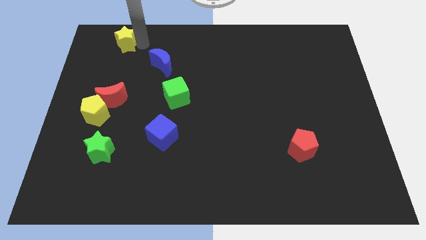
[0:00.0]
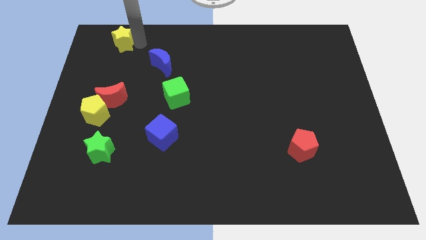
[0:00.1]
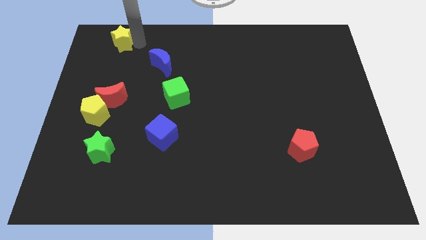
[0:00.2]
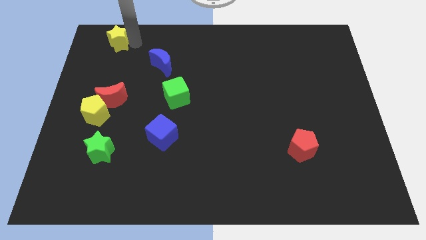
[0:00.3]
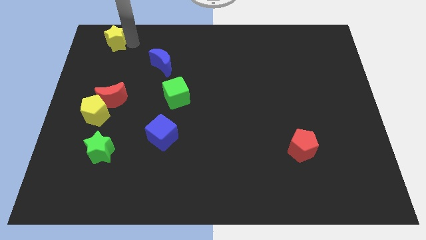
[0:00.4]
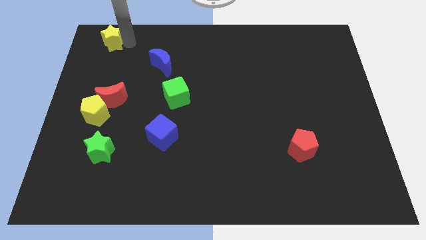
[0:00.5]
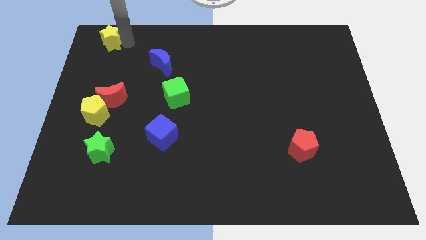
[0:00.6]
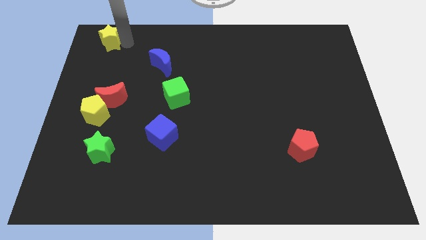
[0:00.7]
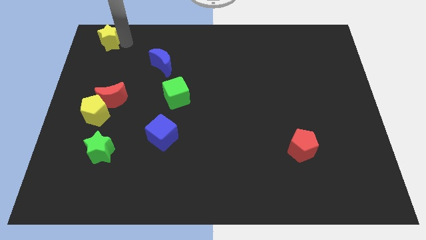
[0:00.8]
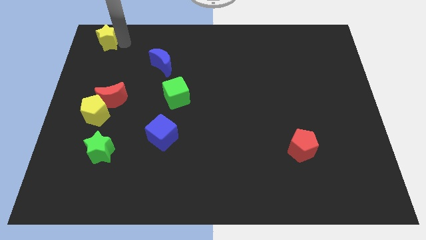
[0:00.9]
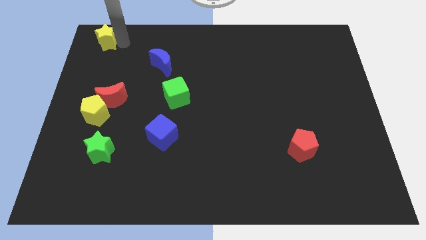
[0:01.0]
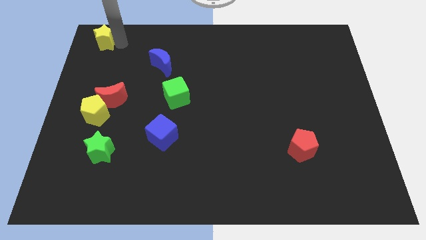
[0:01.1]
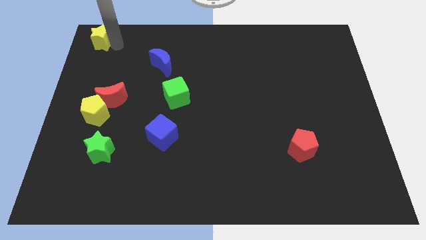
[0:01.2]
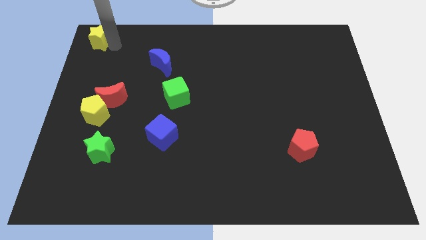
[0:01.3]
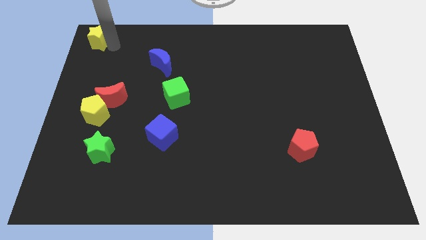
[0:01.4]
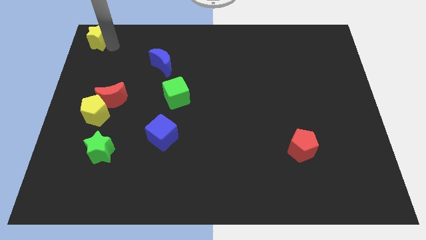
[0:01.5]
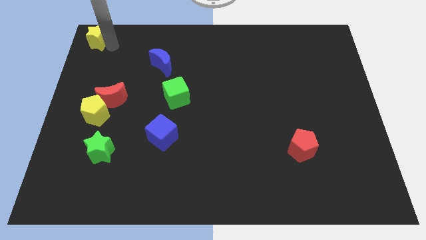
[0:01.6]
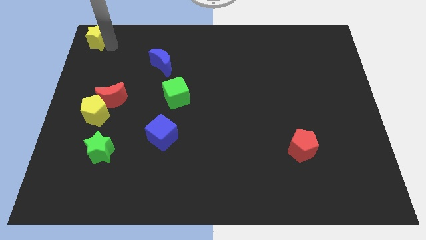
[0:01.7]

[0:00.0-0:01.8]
place the yellow star at the top left corner of the board

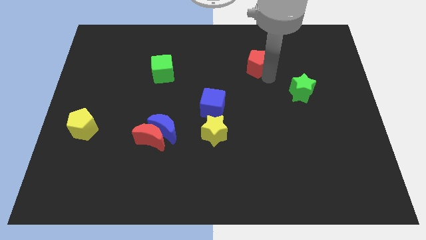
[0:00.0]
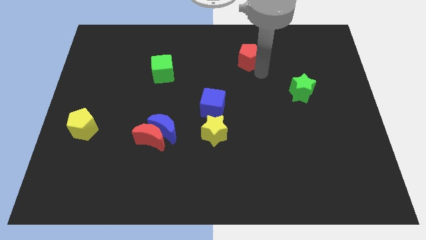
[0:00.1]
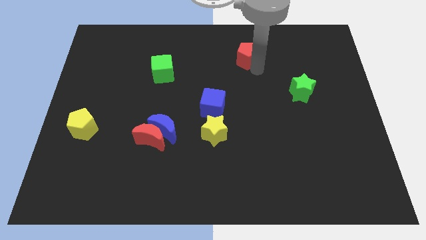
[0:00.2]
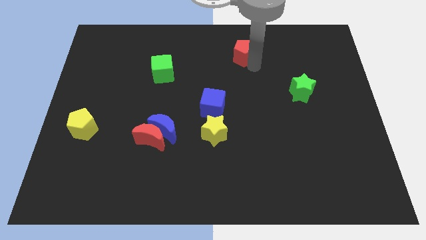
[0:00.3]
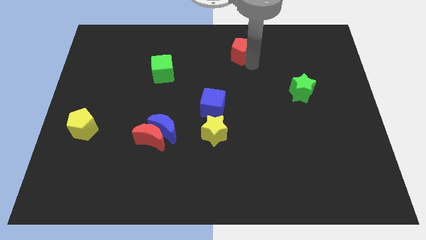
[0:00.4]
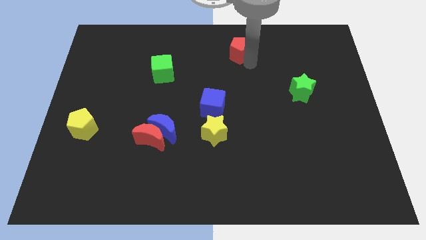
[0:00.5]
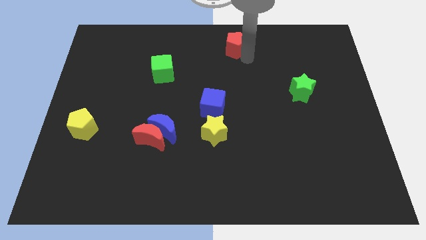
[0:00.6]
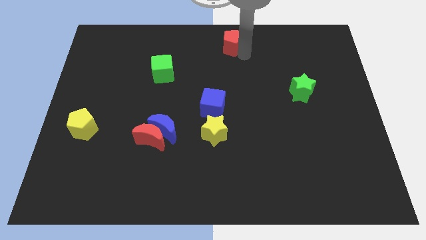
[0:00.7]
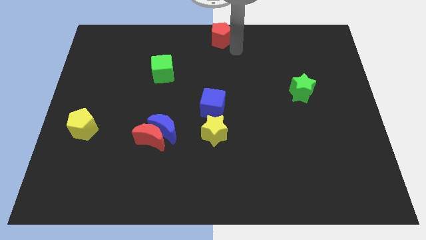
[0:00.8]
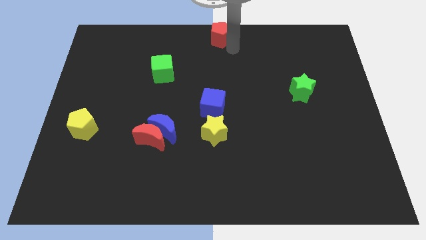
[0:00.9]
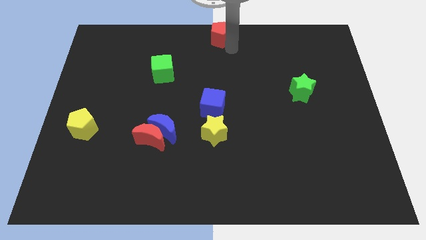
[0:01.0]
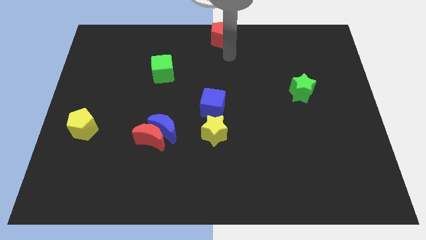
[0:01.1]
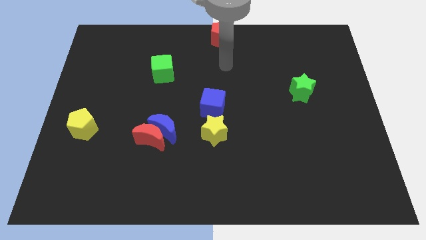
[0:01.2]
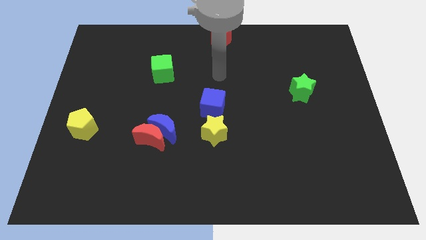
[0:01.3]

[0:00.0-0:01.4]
place the red pentagon to the top center of the board

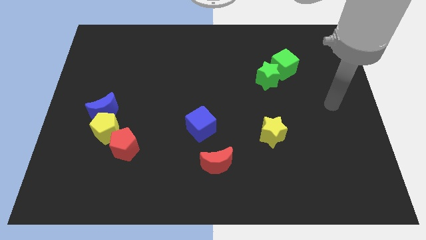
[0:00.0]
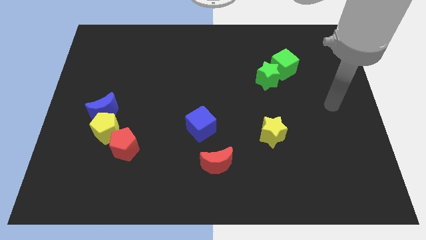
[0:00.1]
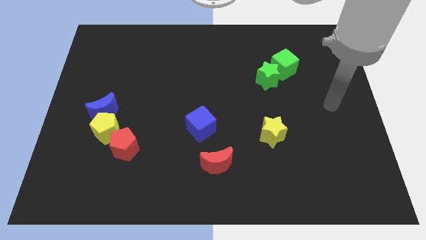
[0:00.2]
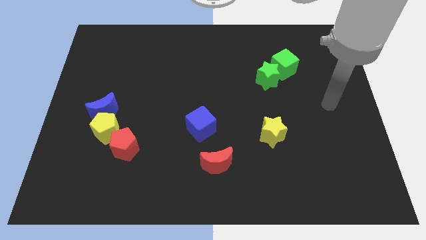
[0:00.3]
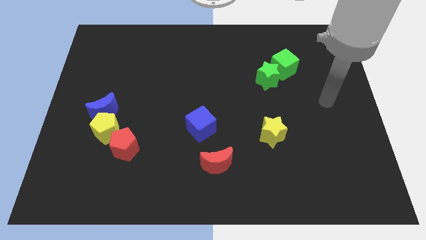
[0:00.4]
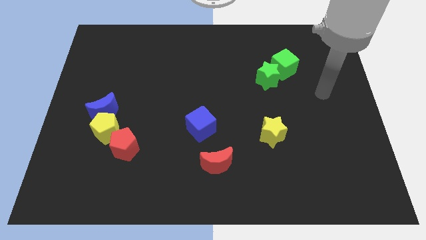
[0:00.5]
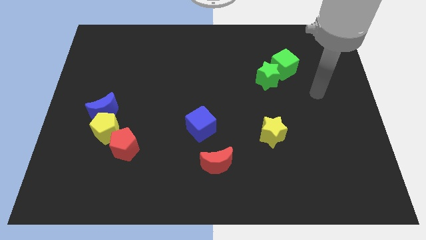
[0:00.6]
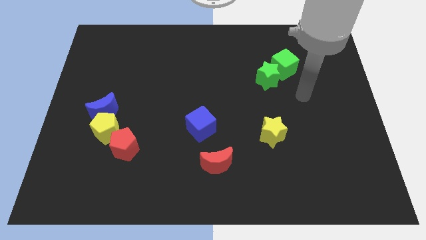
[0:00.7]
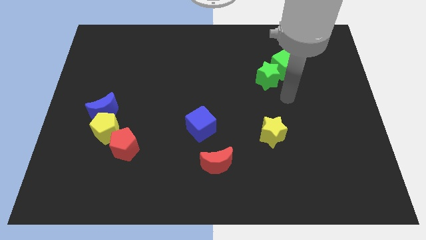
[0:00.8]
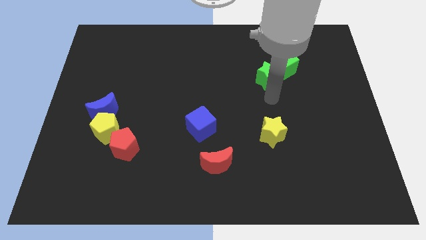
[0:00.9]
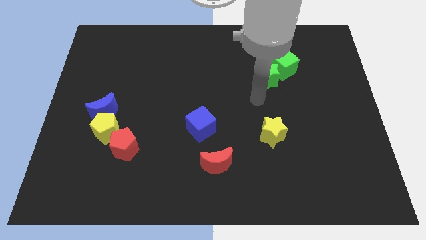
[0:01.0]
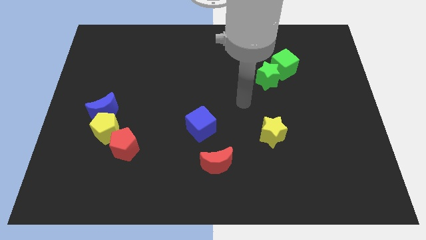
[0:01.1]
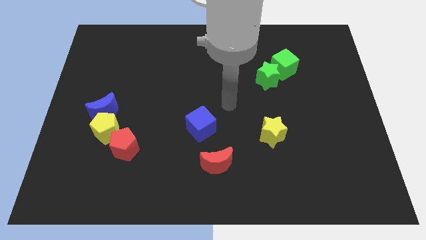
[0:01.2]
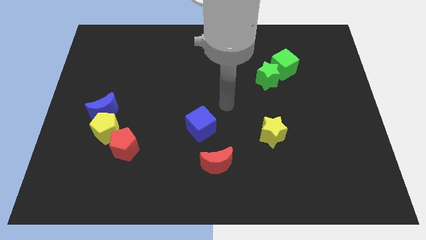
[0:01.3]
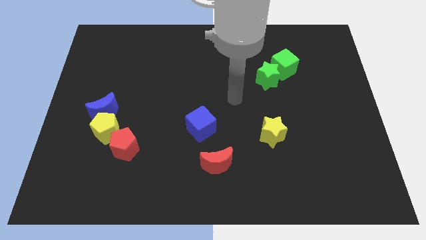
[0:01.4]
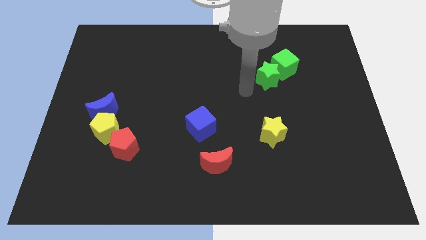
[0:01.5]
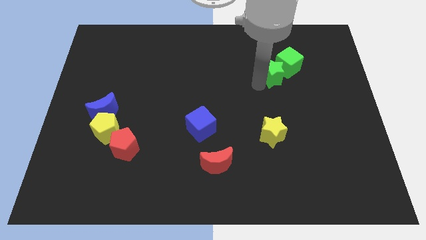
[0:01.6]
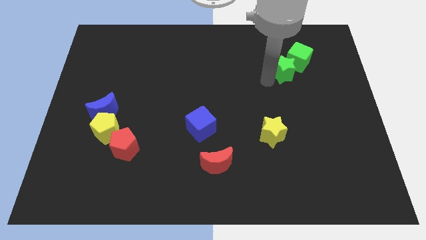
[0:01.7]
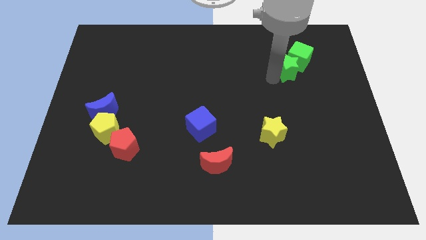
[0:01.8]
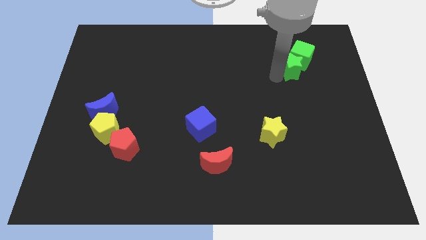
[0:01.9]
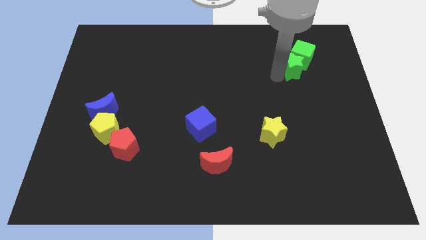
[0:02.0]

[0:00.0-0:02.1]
push the green star into green cube

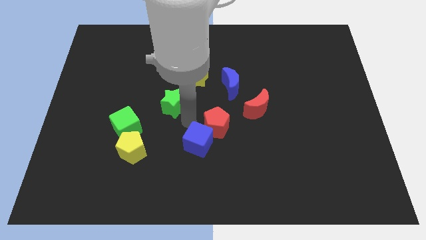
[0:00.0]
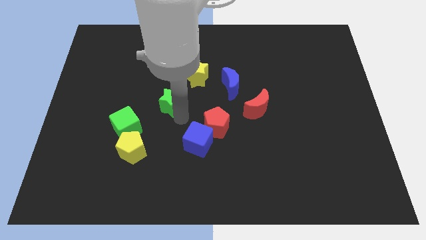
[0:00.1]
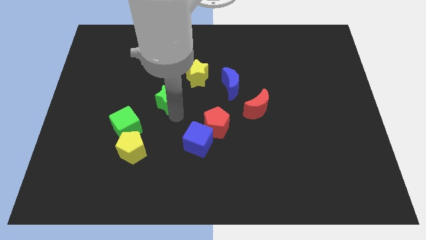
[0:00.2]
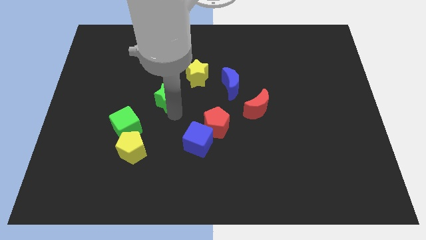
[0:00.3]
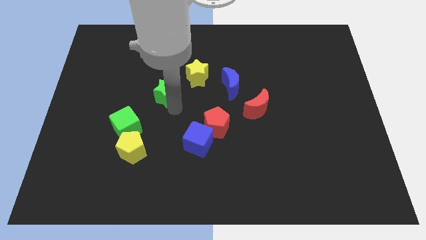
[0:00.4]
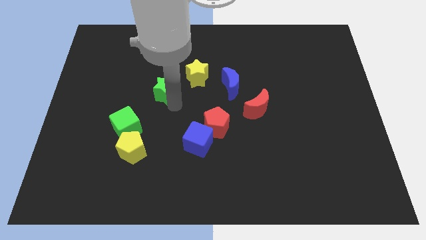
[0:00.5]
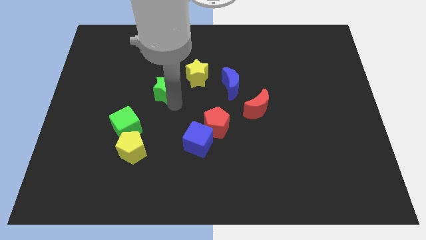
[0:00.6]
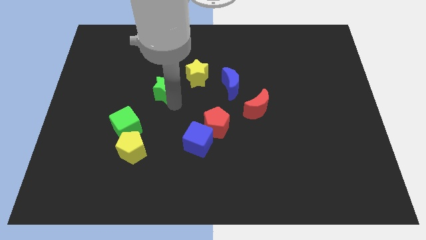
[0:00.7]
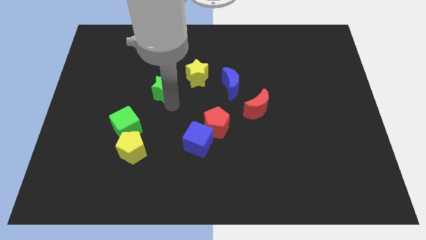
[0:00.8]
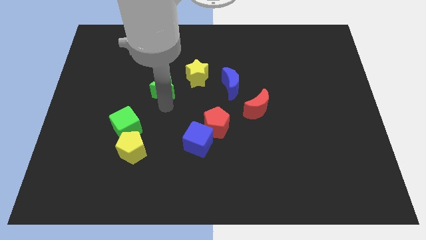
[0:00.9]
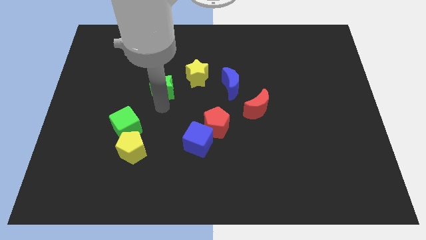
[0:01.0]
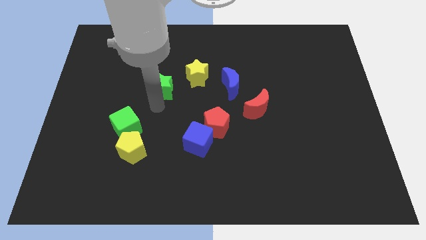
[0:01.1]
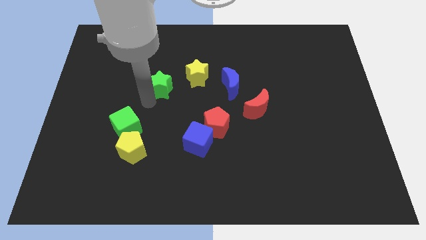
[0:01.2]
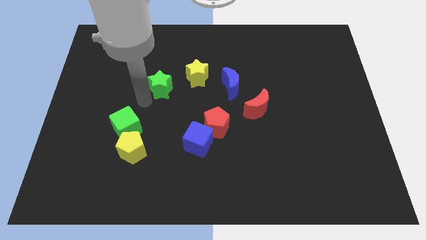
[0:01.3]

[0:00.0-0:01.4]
move the green star diagonal to the left of the yellow star

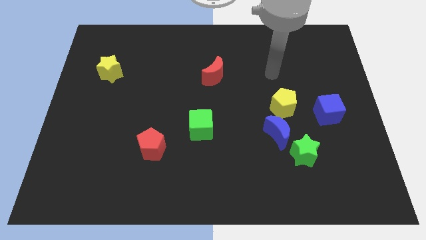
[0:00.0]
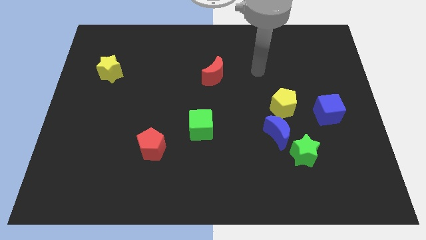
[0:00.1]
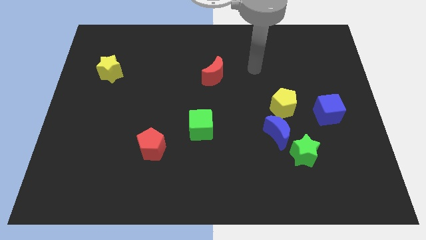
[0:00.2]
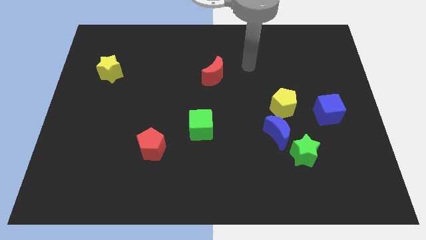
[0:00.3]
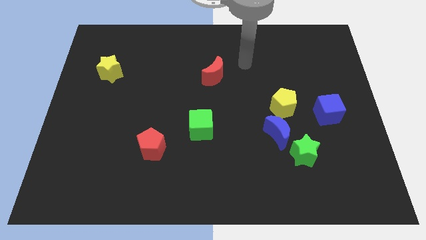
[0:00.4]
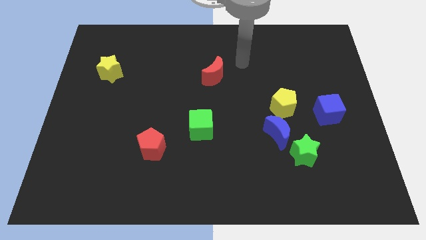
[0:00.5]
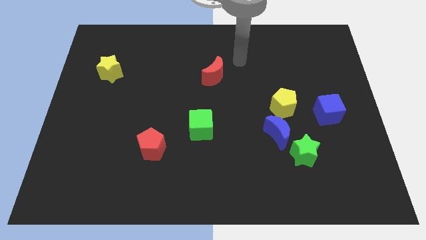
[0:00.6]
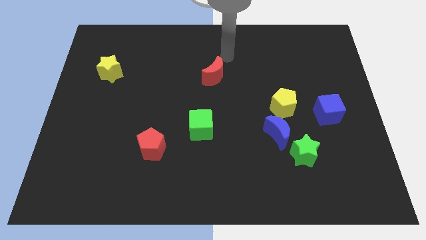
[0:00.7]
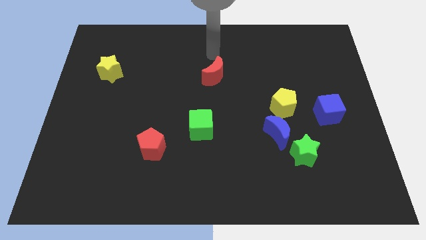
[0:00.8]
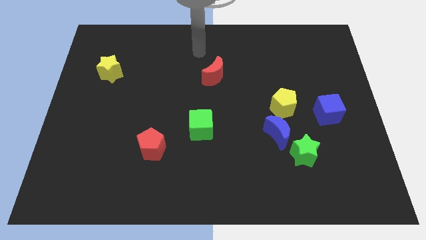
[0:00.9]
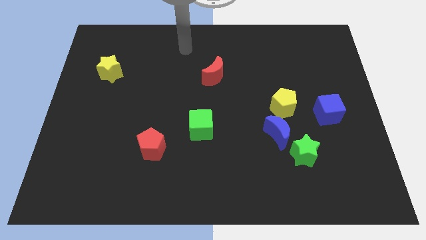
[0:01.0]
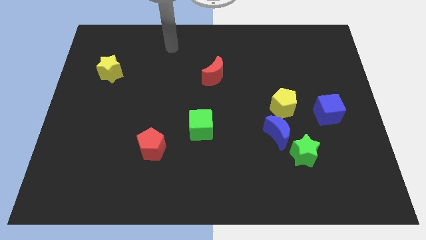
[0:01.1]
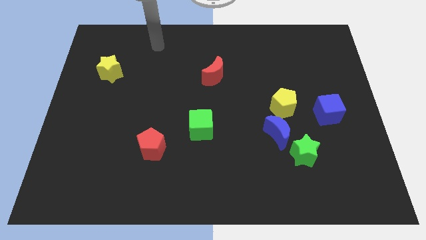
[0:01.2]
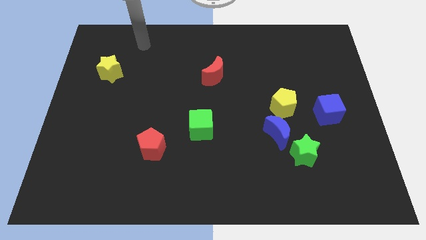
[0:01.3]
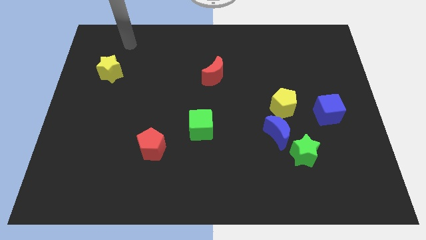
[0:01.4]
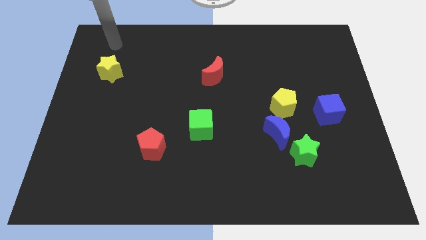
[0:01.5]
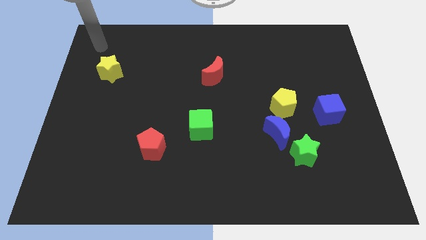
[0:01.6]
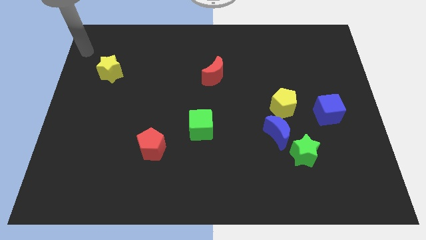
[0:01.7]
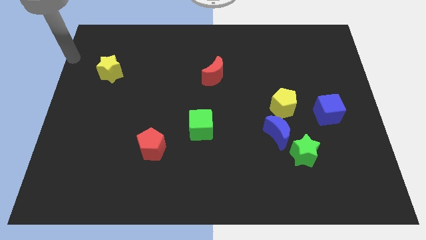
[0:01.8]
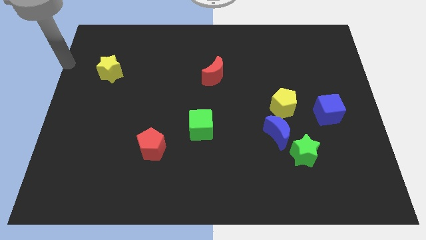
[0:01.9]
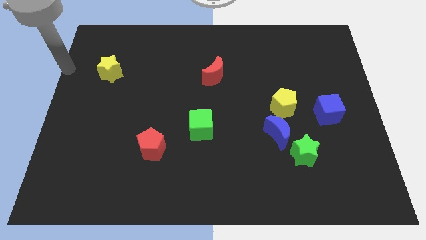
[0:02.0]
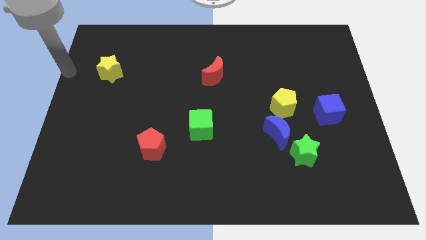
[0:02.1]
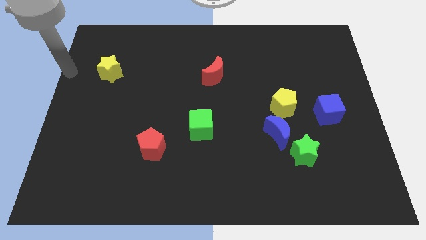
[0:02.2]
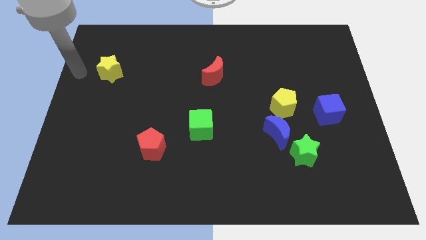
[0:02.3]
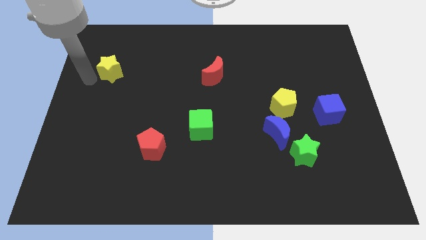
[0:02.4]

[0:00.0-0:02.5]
point your arm towards the bottom left side of the yellow star
